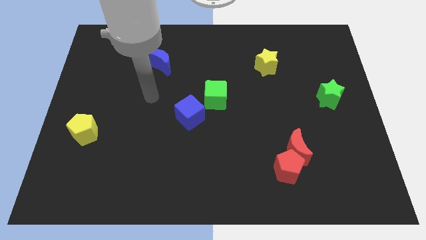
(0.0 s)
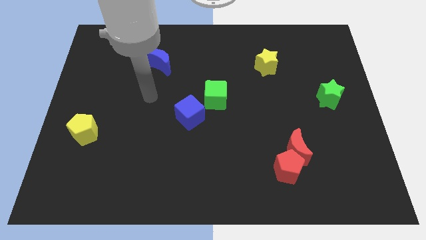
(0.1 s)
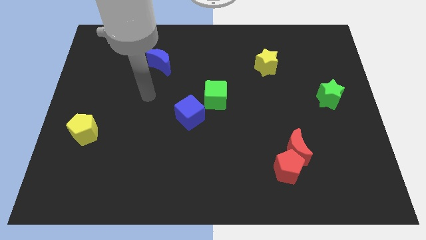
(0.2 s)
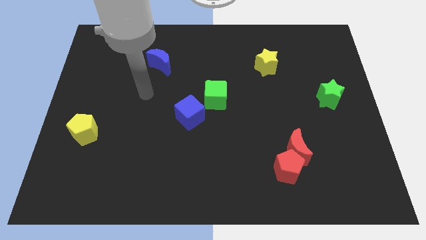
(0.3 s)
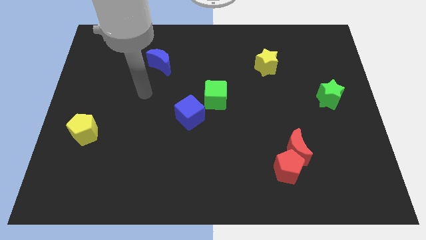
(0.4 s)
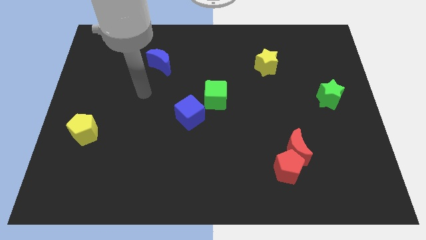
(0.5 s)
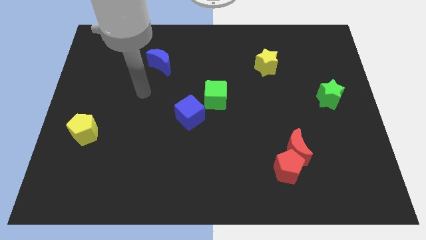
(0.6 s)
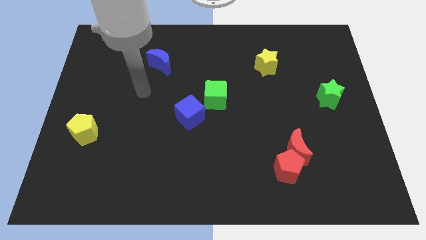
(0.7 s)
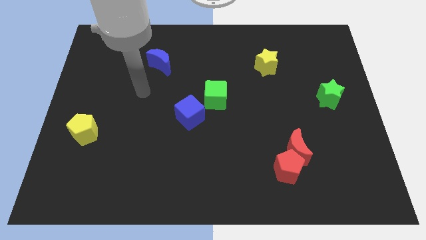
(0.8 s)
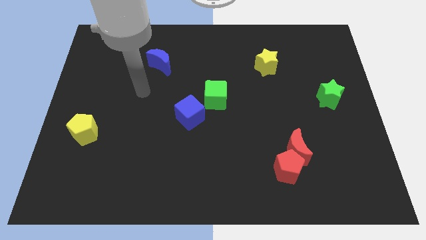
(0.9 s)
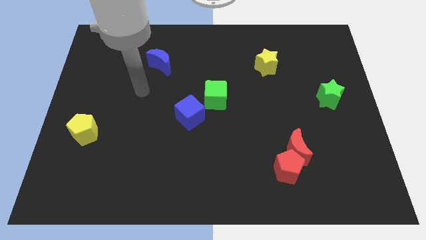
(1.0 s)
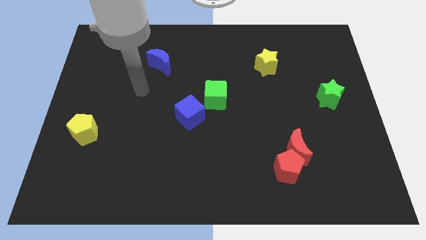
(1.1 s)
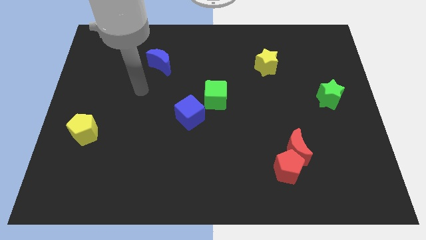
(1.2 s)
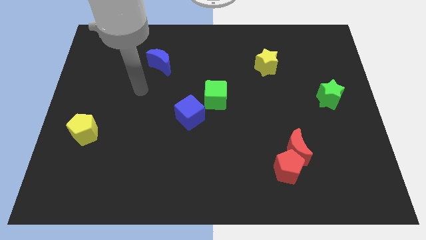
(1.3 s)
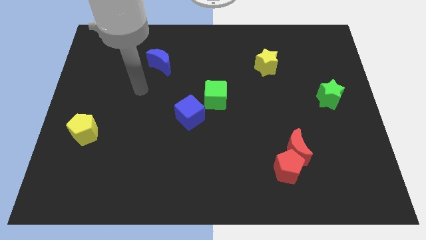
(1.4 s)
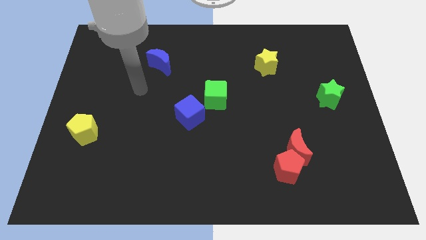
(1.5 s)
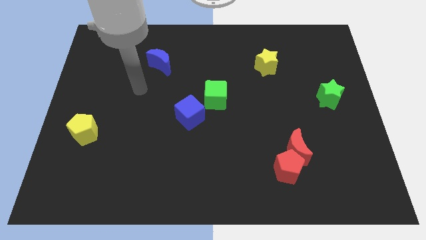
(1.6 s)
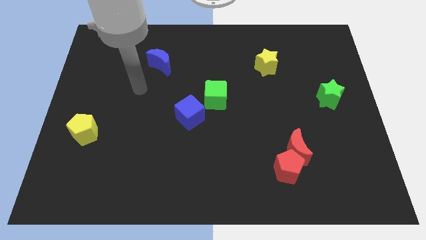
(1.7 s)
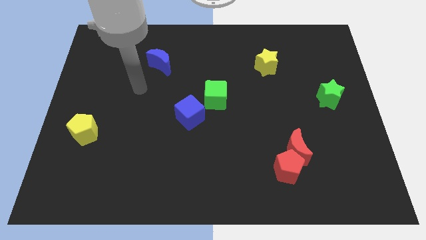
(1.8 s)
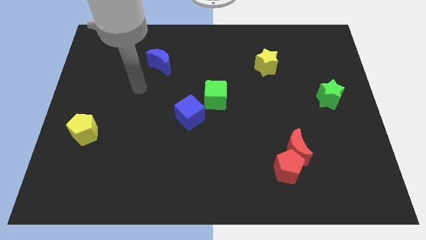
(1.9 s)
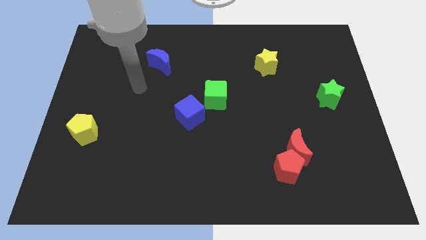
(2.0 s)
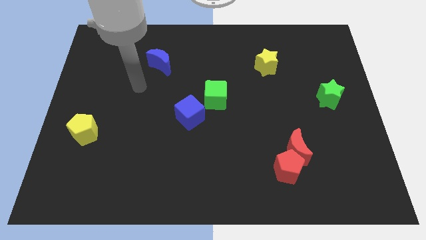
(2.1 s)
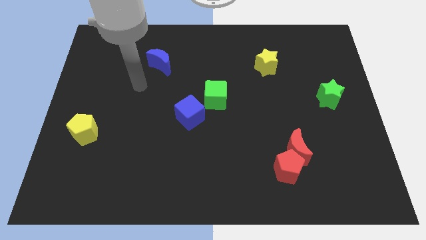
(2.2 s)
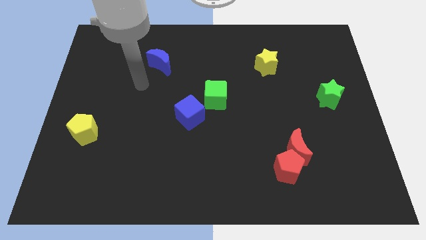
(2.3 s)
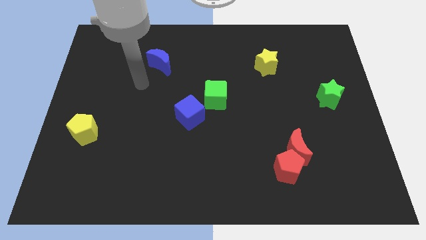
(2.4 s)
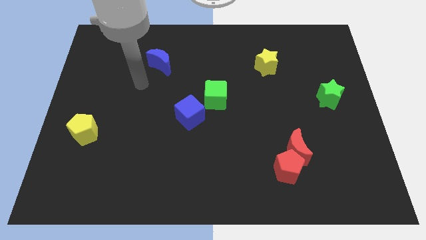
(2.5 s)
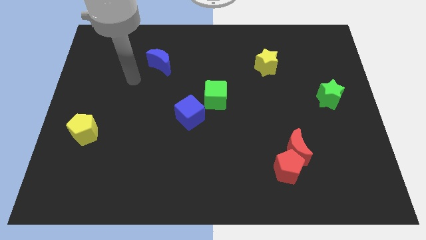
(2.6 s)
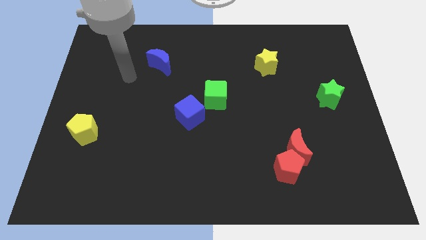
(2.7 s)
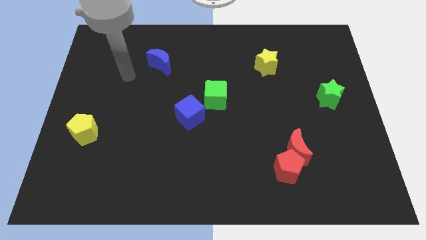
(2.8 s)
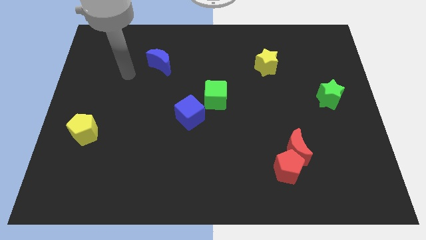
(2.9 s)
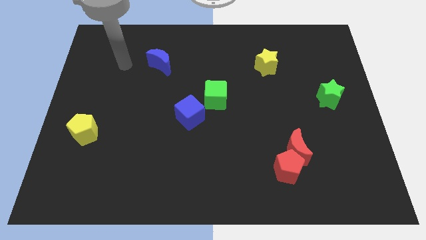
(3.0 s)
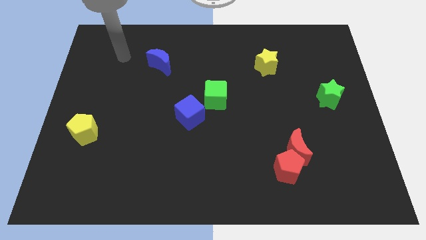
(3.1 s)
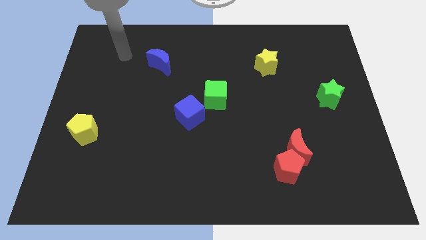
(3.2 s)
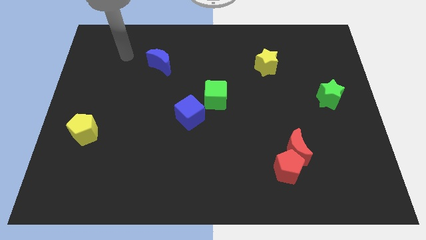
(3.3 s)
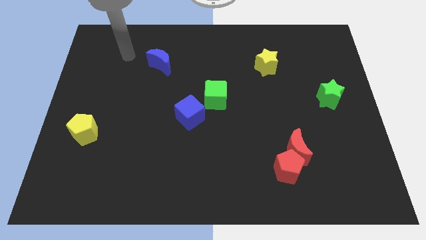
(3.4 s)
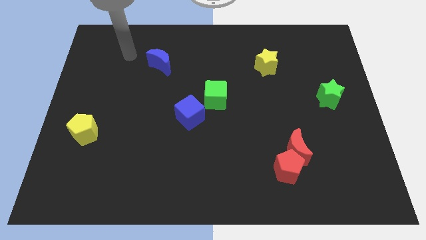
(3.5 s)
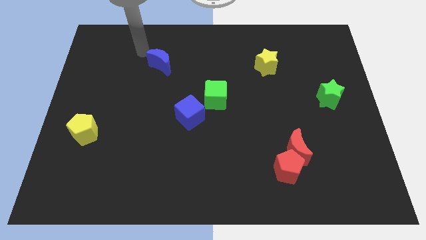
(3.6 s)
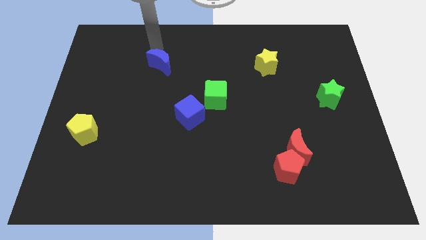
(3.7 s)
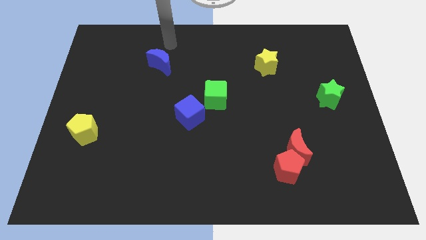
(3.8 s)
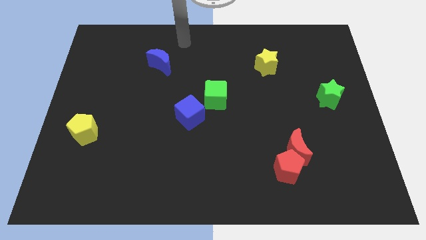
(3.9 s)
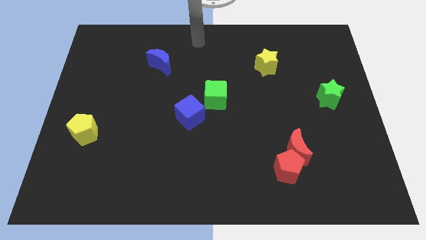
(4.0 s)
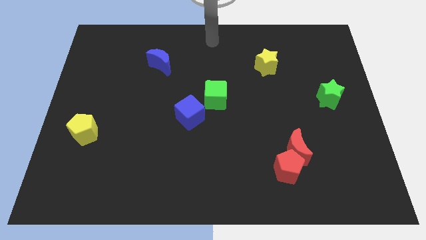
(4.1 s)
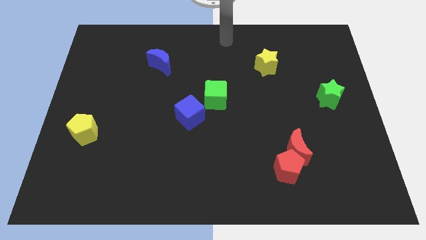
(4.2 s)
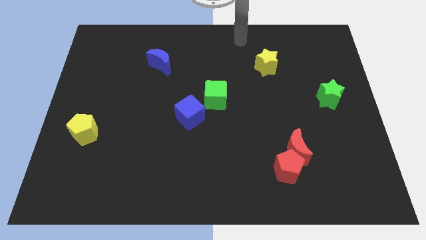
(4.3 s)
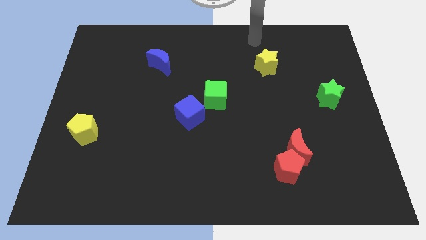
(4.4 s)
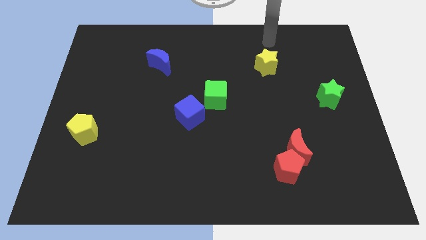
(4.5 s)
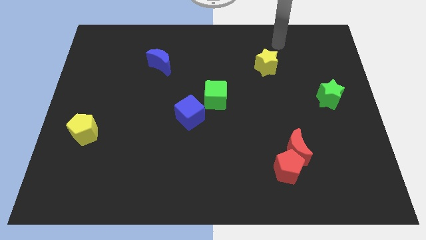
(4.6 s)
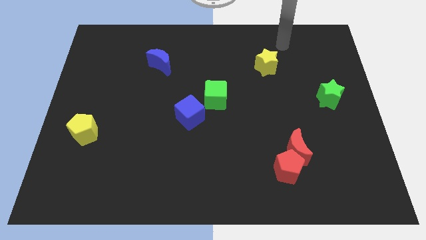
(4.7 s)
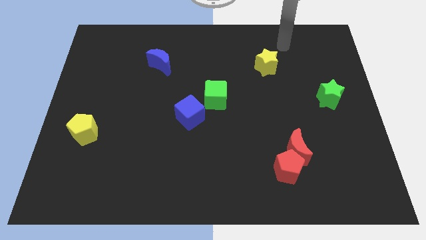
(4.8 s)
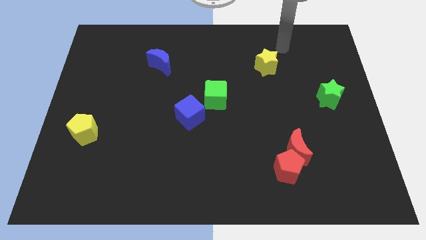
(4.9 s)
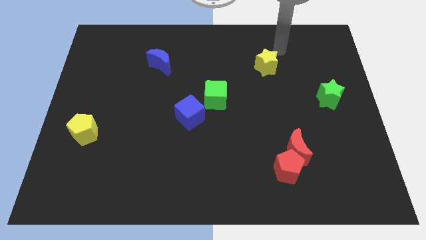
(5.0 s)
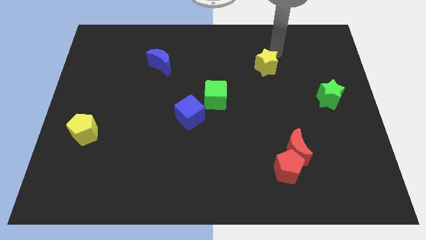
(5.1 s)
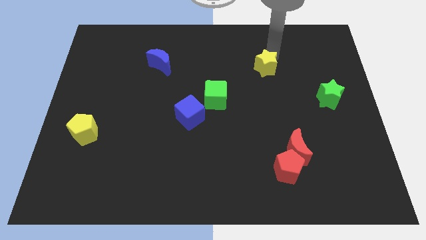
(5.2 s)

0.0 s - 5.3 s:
move your arm towards the yellow star

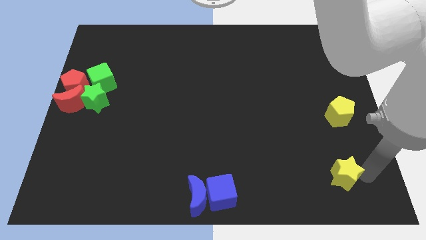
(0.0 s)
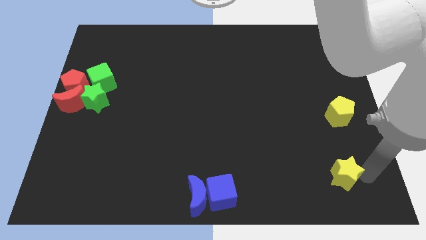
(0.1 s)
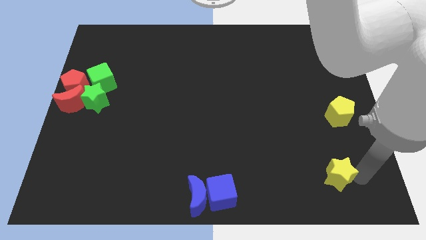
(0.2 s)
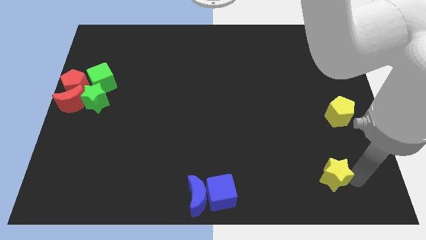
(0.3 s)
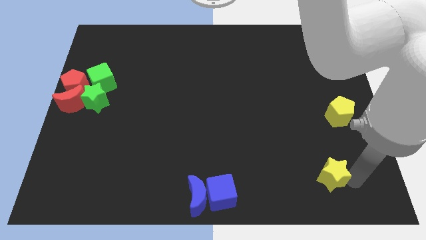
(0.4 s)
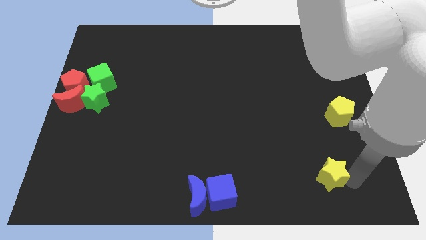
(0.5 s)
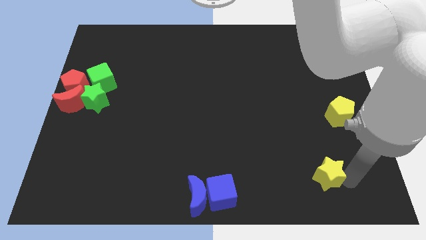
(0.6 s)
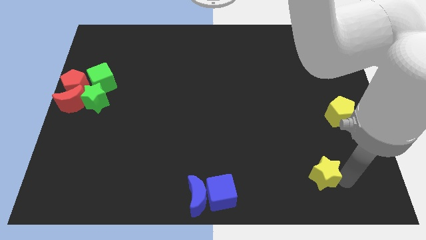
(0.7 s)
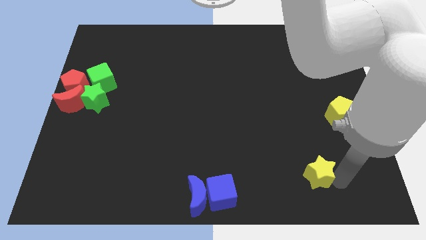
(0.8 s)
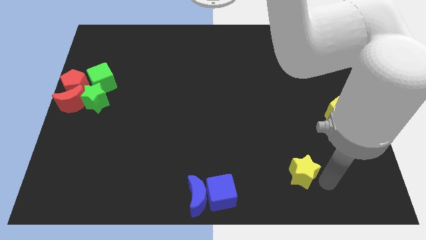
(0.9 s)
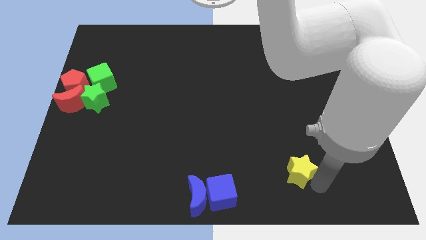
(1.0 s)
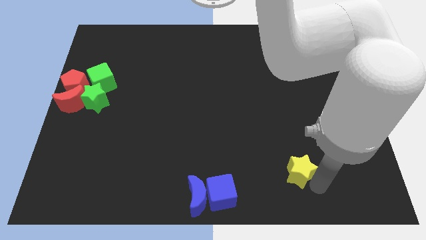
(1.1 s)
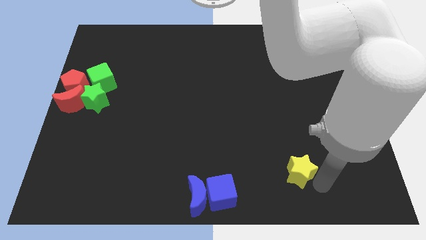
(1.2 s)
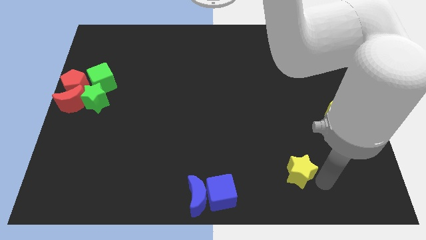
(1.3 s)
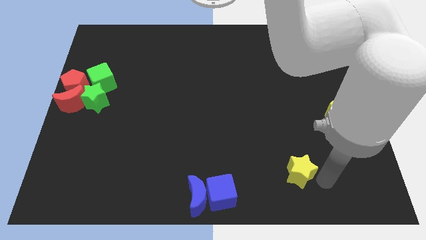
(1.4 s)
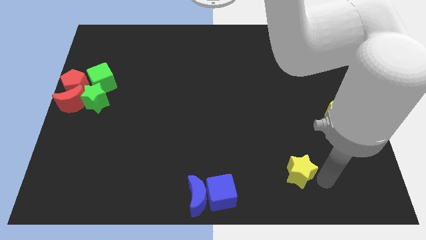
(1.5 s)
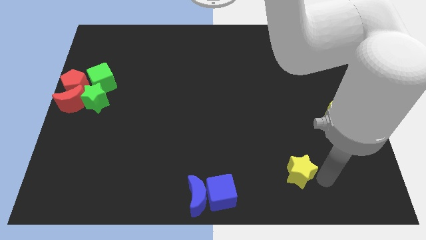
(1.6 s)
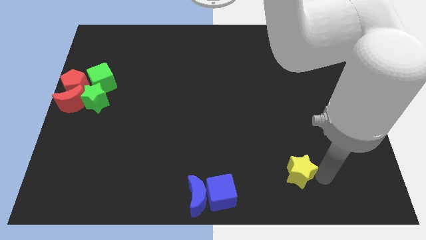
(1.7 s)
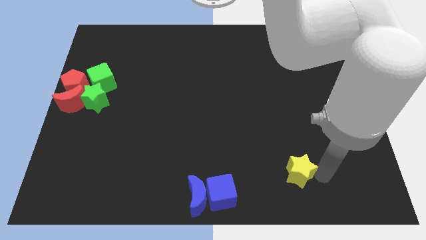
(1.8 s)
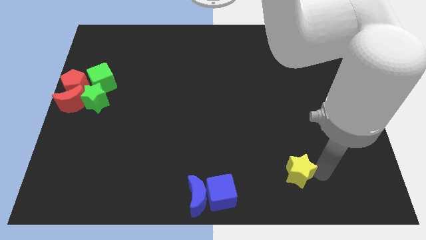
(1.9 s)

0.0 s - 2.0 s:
place the yellow star diagonally top right to the blue cube

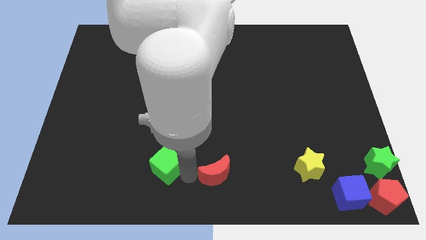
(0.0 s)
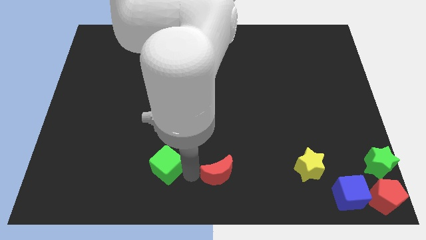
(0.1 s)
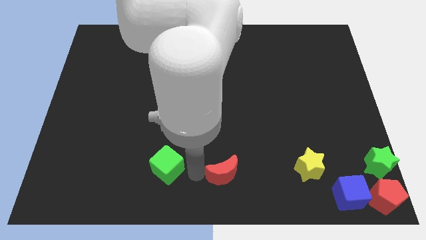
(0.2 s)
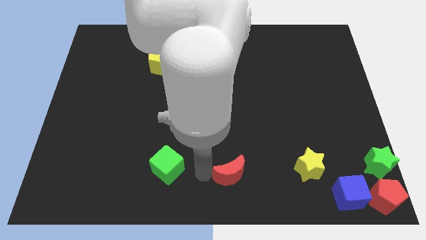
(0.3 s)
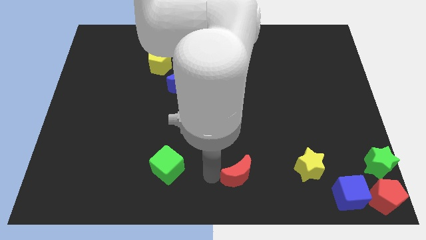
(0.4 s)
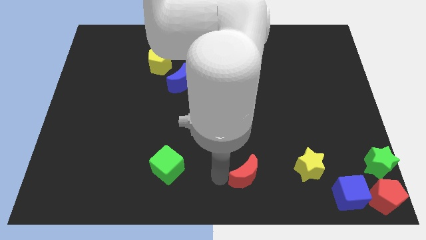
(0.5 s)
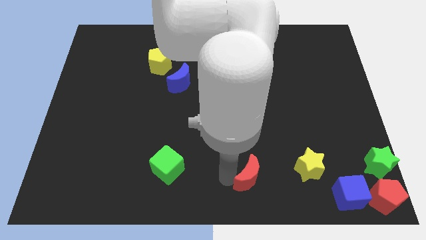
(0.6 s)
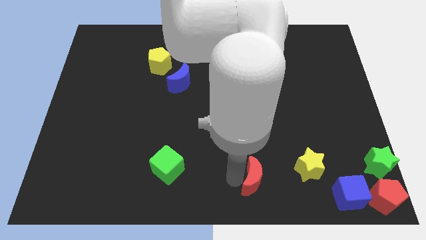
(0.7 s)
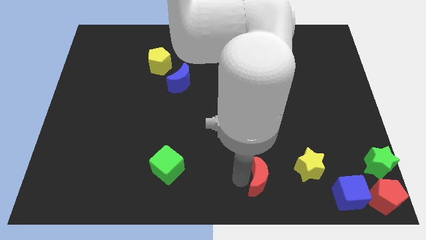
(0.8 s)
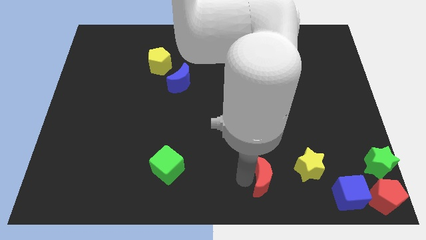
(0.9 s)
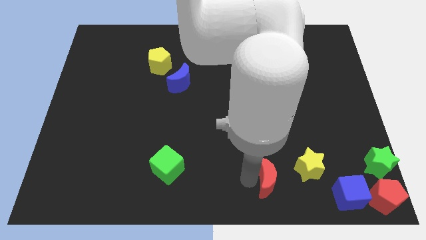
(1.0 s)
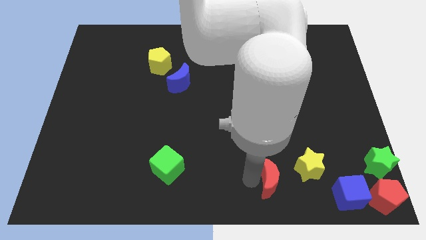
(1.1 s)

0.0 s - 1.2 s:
slightly move the red moon towards the right of the board

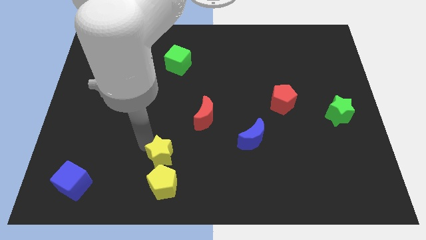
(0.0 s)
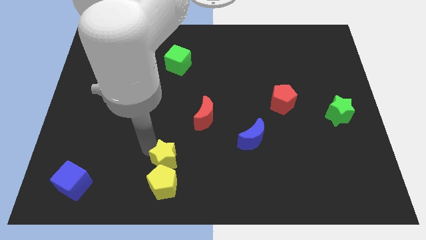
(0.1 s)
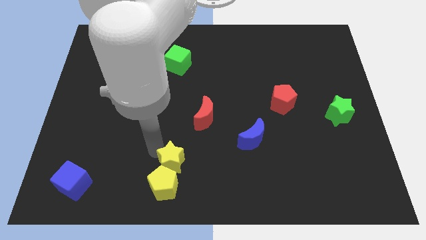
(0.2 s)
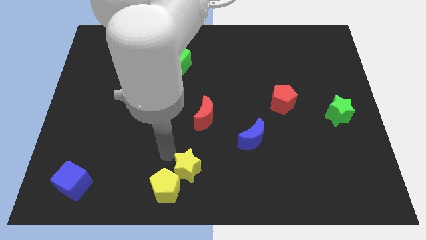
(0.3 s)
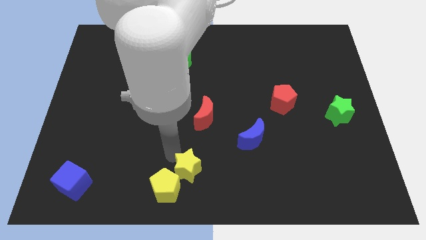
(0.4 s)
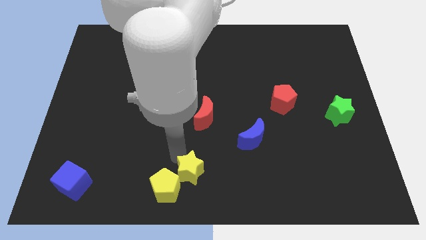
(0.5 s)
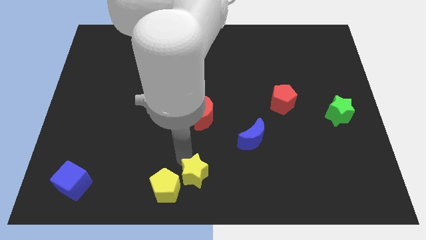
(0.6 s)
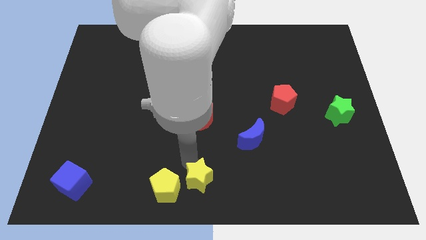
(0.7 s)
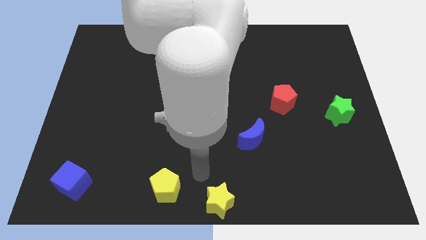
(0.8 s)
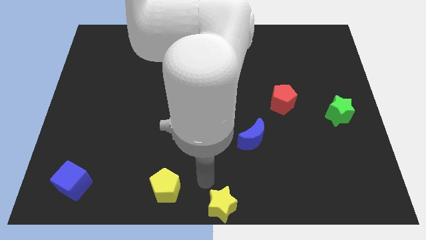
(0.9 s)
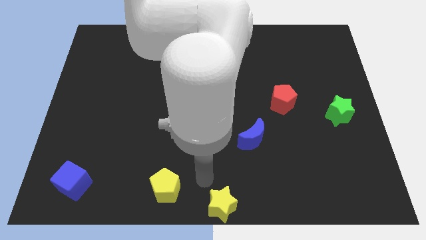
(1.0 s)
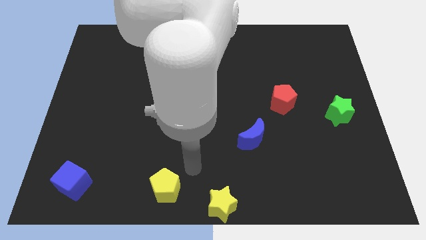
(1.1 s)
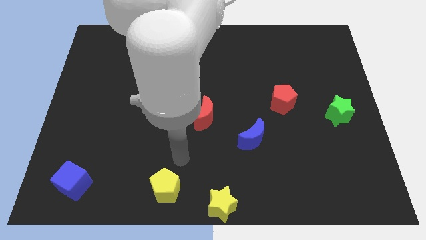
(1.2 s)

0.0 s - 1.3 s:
place the yellow star at the bottom center of the board
